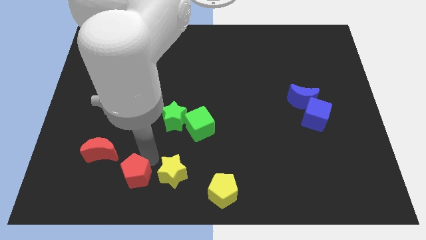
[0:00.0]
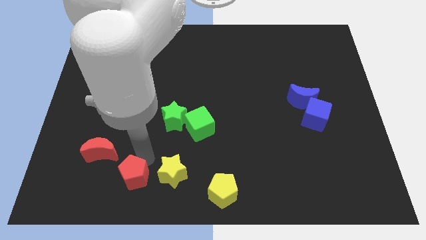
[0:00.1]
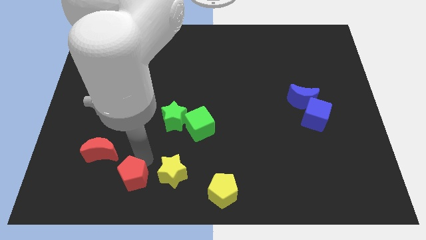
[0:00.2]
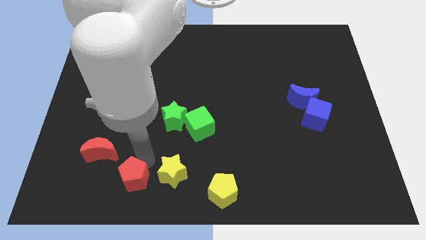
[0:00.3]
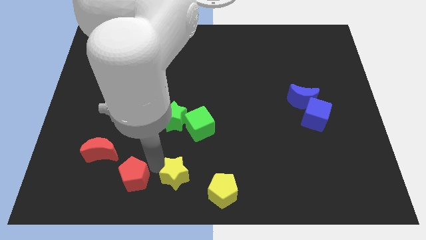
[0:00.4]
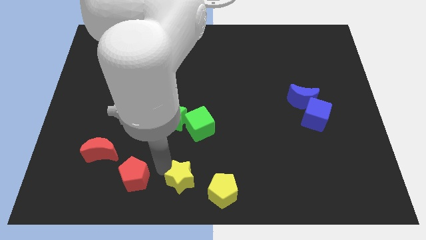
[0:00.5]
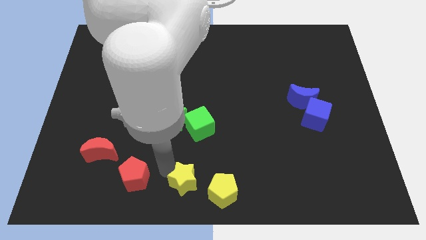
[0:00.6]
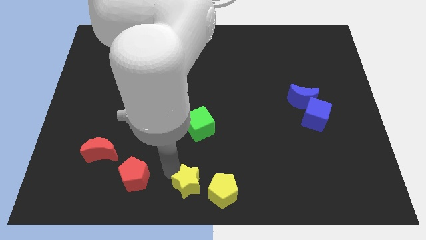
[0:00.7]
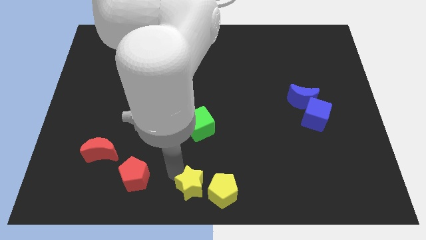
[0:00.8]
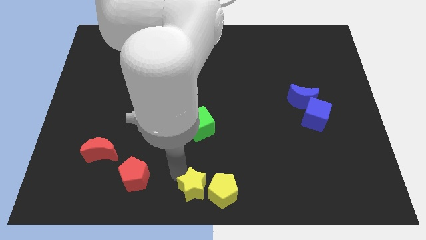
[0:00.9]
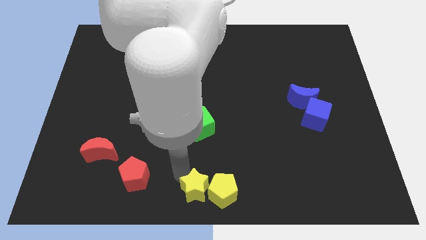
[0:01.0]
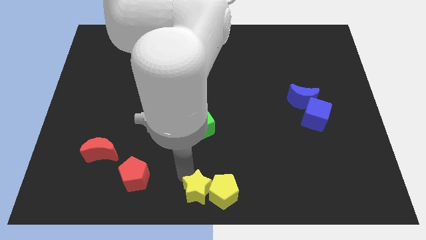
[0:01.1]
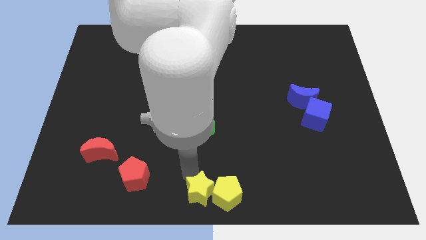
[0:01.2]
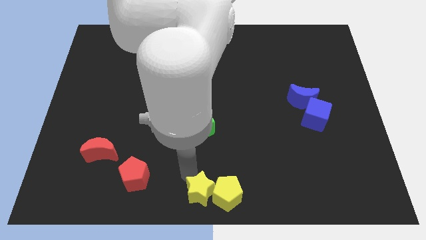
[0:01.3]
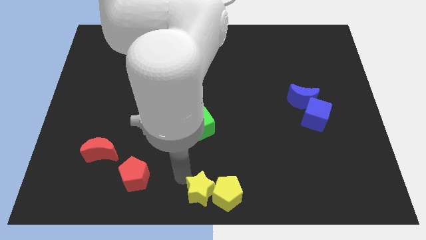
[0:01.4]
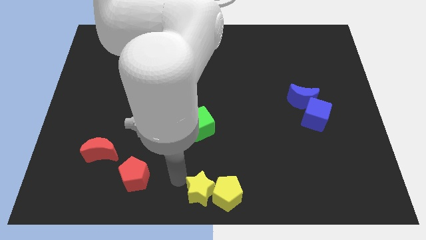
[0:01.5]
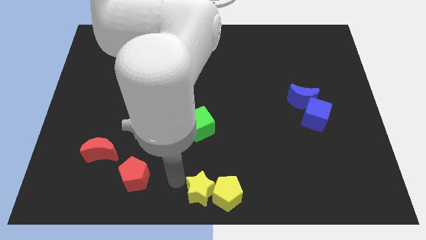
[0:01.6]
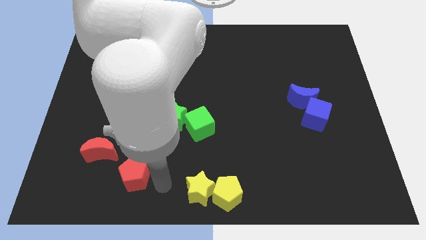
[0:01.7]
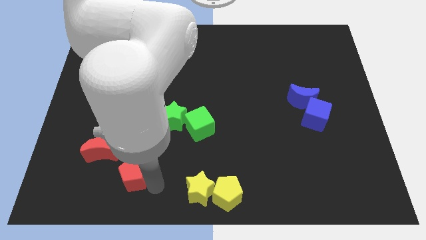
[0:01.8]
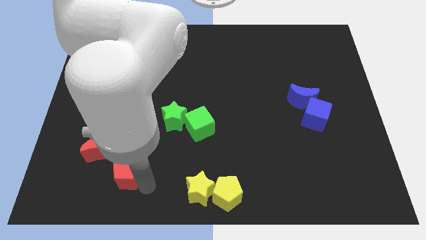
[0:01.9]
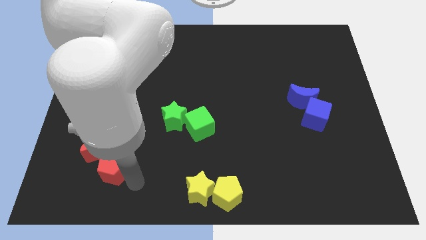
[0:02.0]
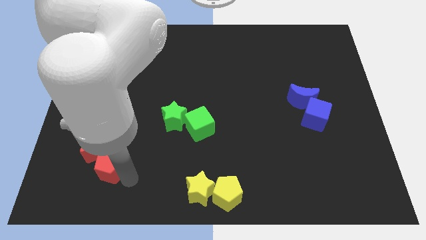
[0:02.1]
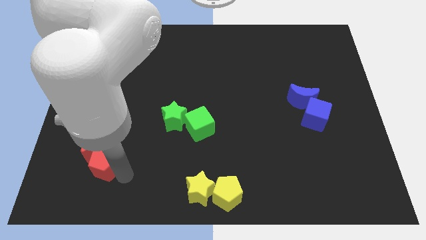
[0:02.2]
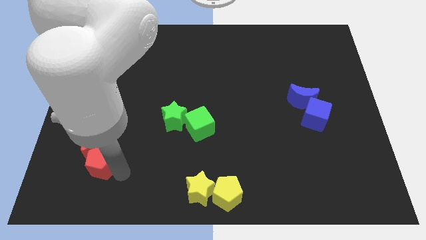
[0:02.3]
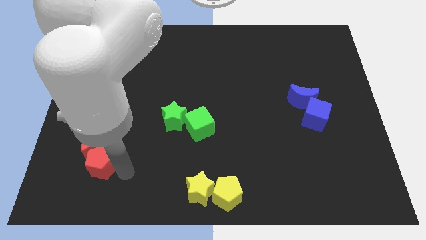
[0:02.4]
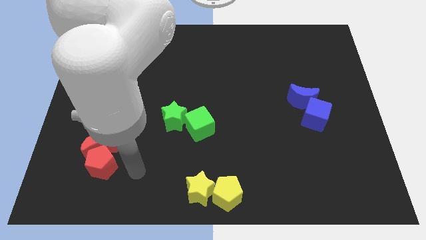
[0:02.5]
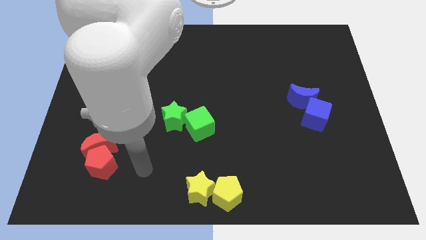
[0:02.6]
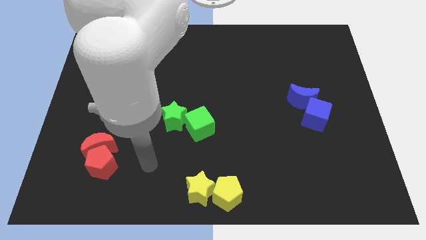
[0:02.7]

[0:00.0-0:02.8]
place the yellow and red blocks separately

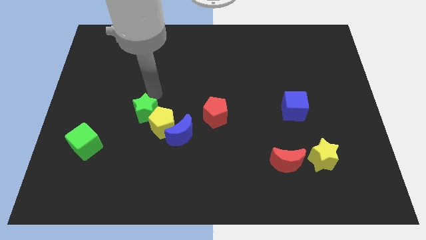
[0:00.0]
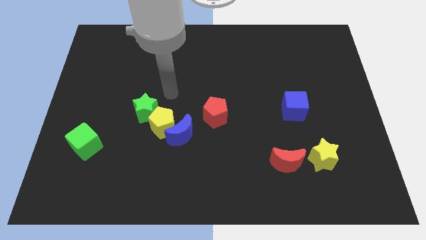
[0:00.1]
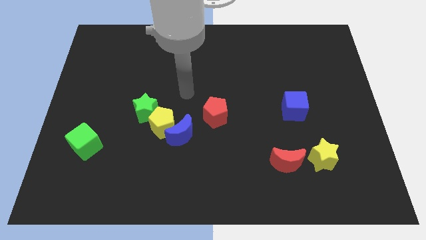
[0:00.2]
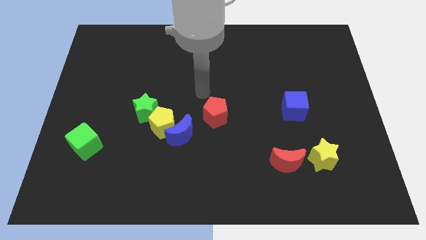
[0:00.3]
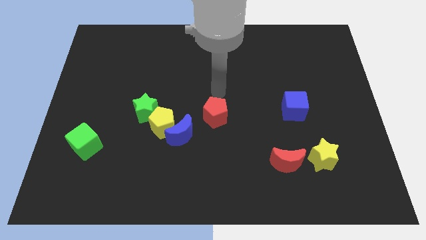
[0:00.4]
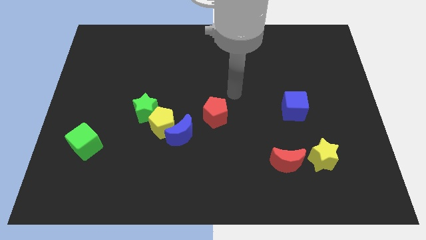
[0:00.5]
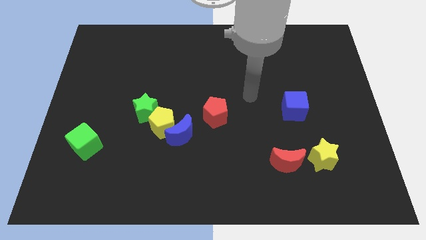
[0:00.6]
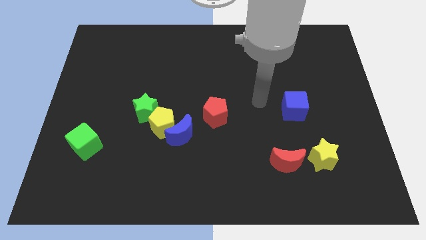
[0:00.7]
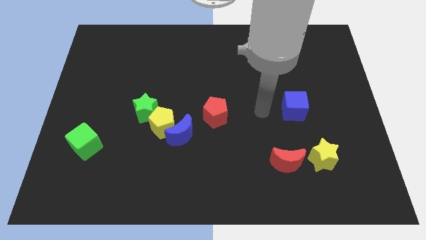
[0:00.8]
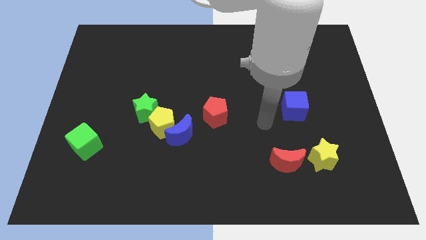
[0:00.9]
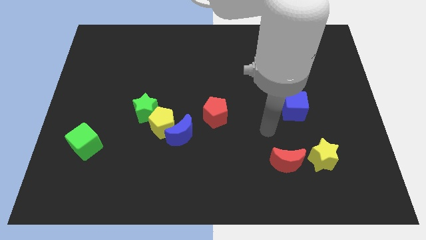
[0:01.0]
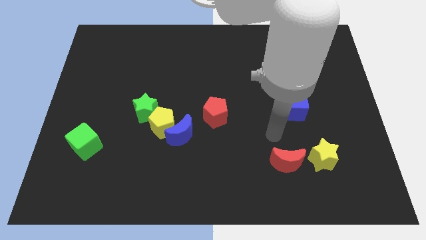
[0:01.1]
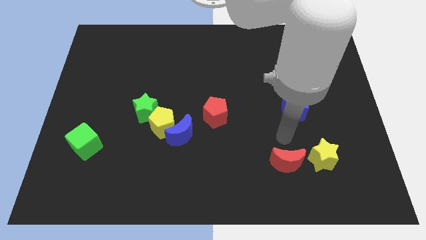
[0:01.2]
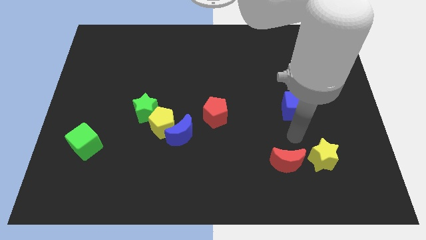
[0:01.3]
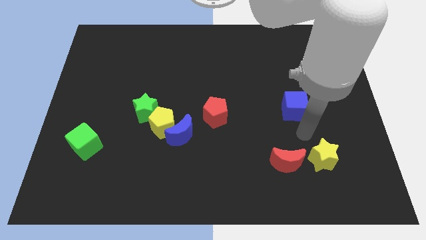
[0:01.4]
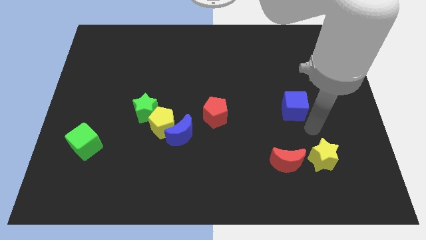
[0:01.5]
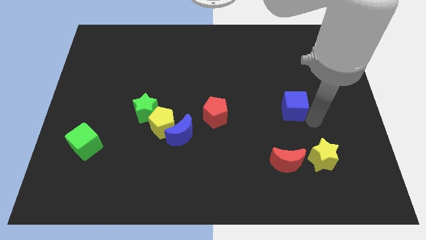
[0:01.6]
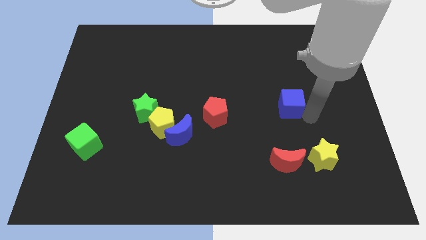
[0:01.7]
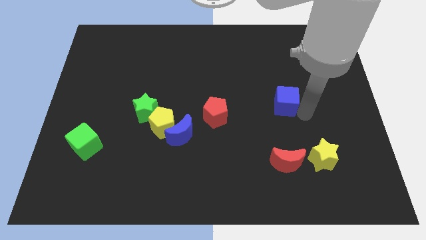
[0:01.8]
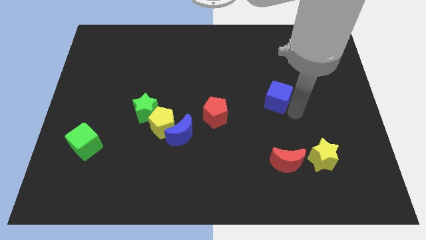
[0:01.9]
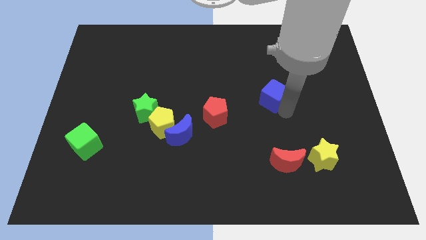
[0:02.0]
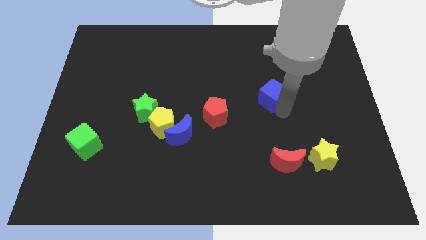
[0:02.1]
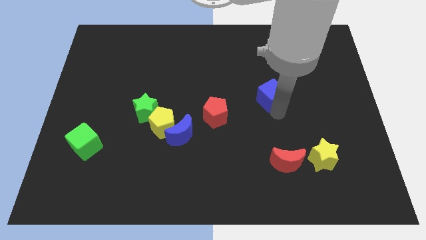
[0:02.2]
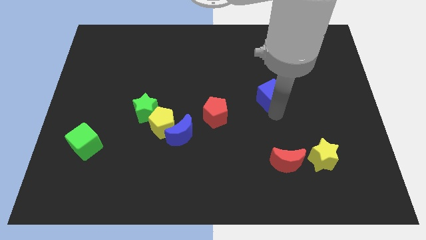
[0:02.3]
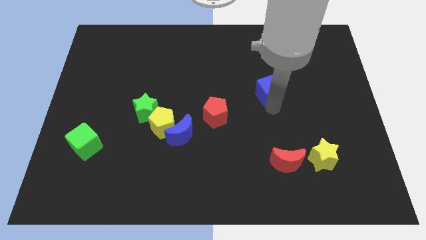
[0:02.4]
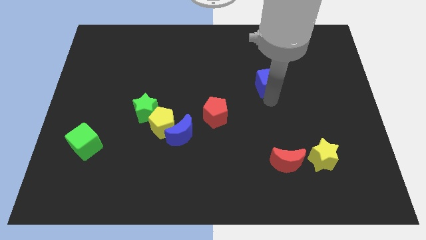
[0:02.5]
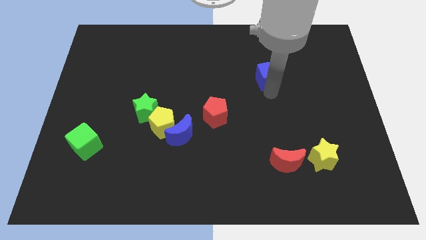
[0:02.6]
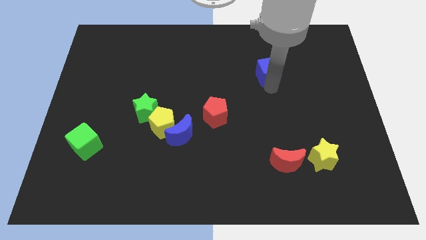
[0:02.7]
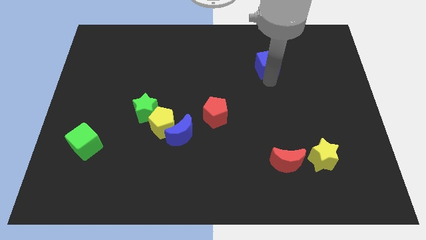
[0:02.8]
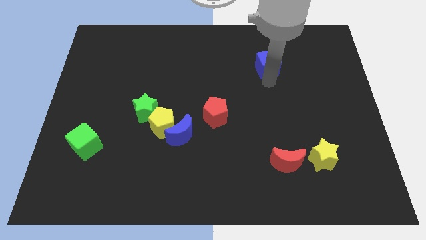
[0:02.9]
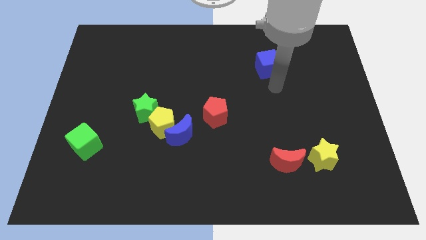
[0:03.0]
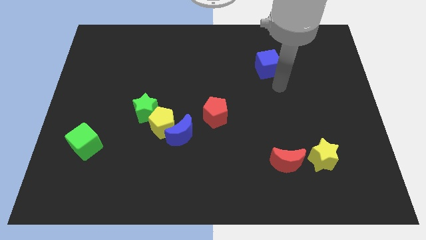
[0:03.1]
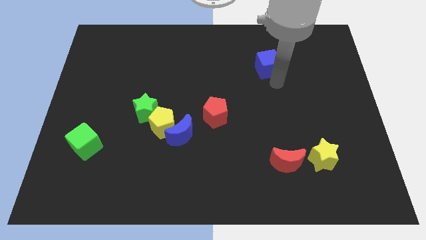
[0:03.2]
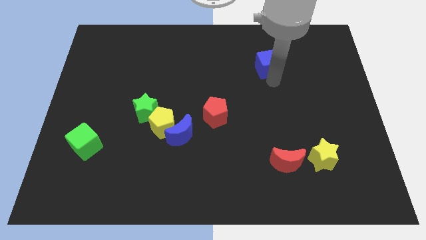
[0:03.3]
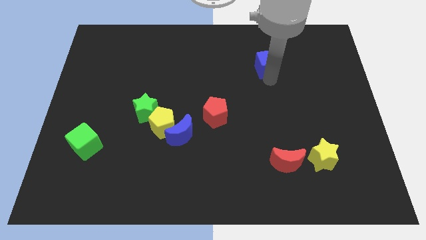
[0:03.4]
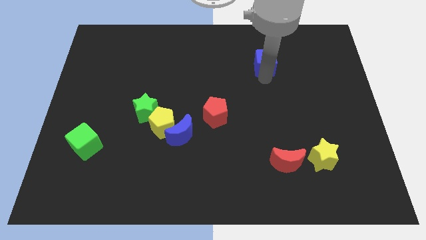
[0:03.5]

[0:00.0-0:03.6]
push the blue cube upward

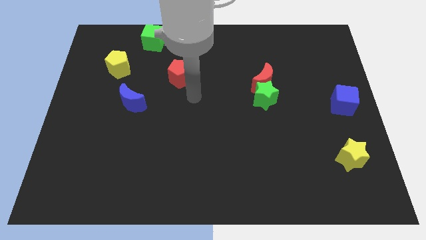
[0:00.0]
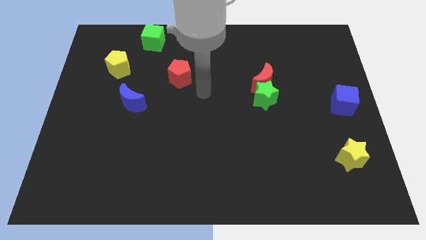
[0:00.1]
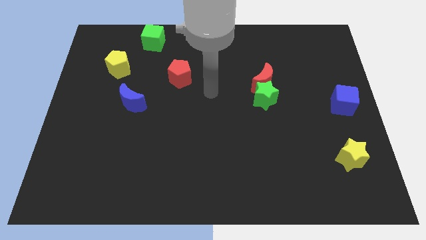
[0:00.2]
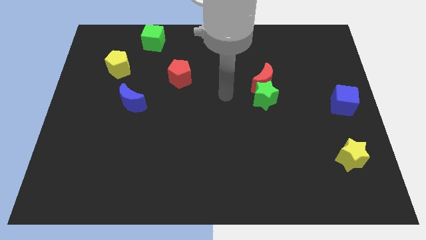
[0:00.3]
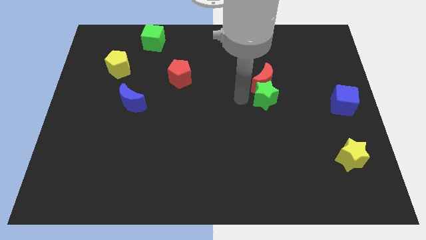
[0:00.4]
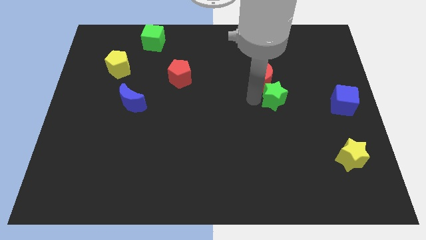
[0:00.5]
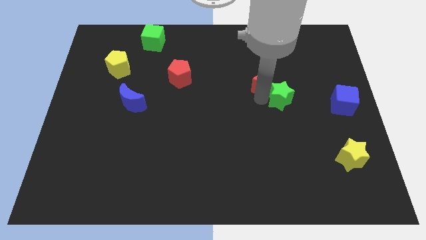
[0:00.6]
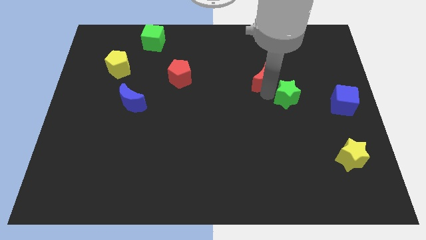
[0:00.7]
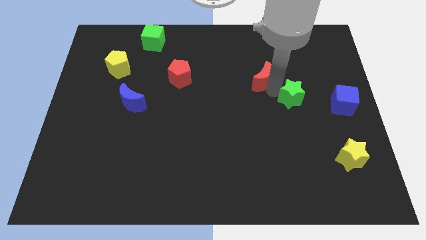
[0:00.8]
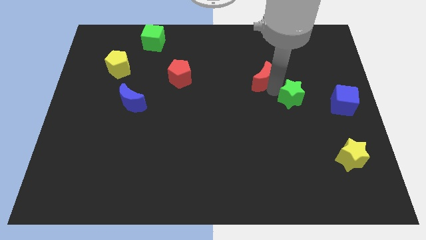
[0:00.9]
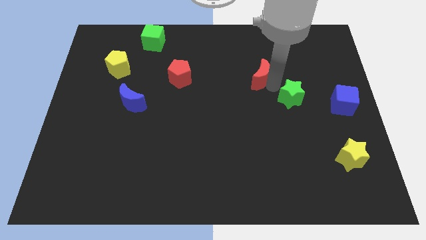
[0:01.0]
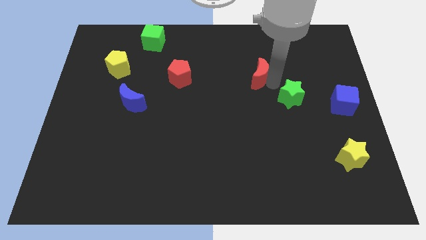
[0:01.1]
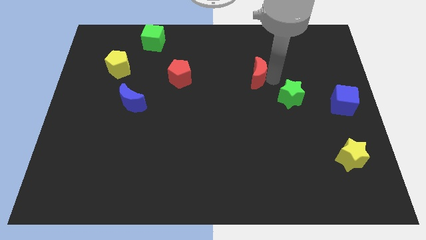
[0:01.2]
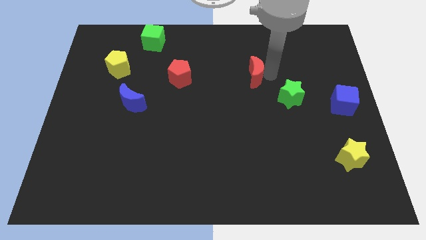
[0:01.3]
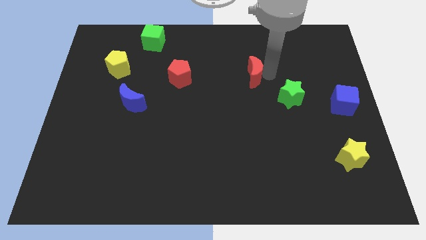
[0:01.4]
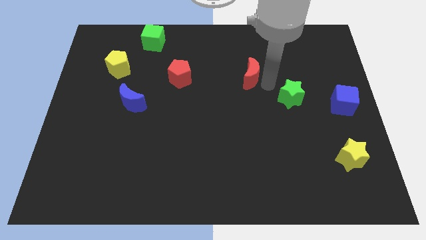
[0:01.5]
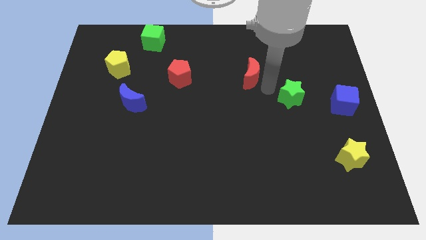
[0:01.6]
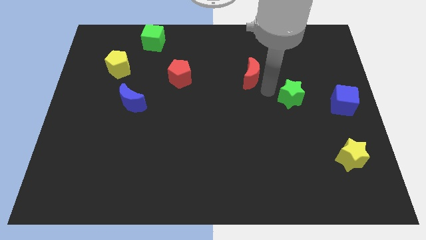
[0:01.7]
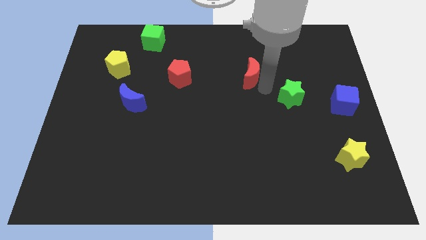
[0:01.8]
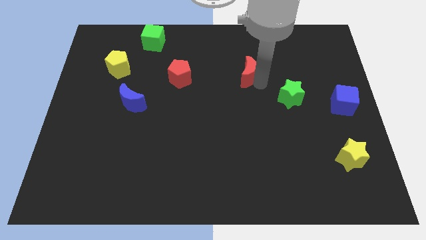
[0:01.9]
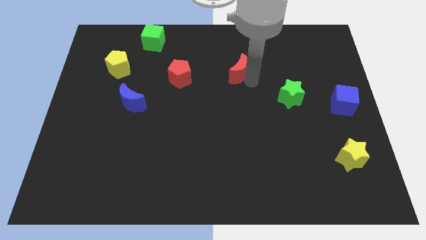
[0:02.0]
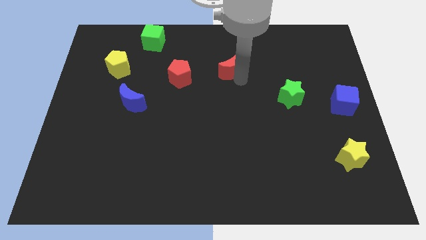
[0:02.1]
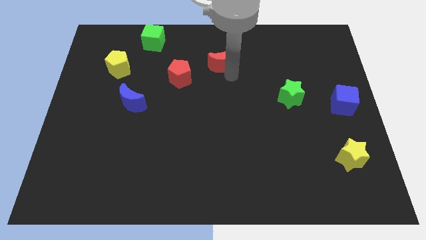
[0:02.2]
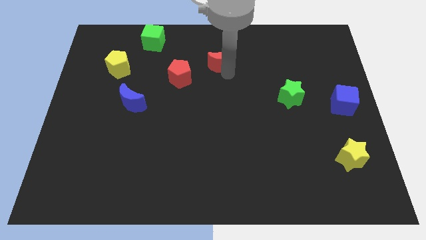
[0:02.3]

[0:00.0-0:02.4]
separate the red moon from the green star

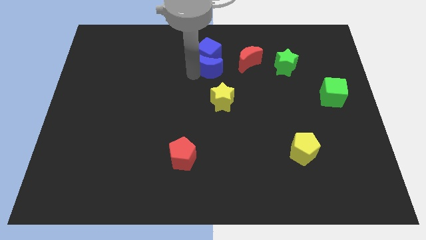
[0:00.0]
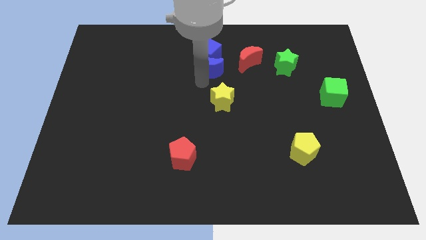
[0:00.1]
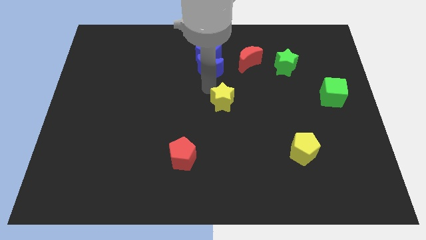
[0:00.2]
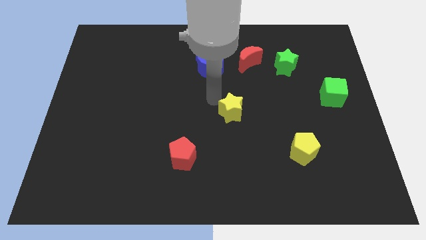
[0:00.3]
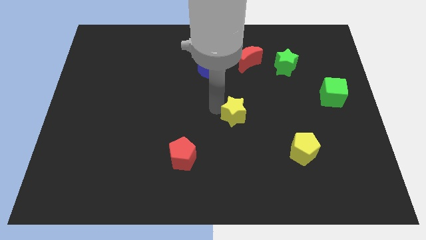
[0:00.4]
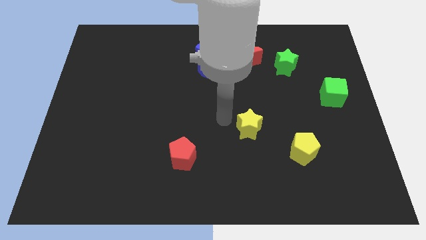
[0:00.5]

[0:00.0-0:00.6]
push the yellow star towards the yellow pentagon
